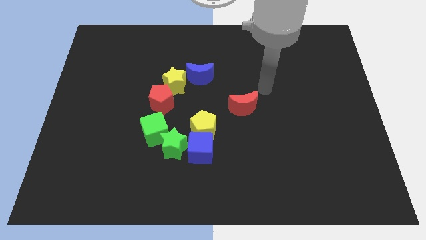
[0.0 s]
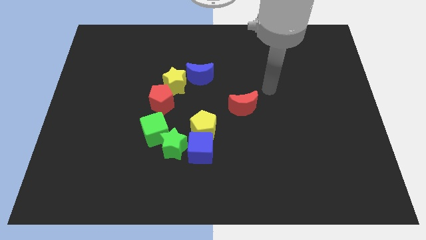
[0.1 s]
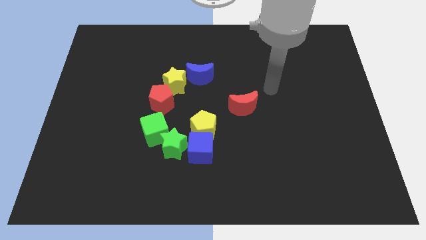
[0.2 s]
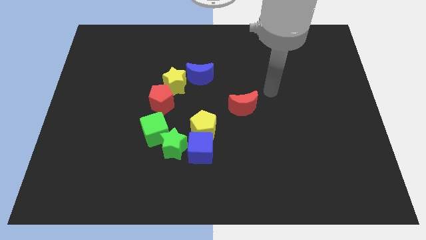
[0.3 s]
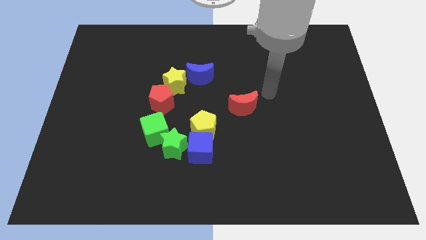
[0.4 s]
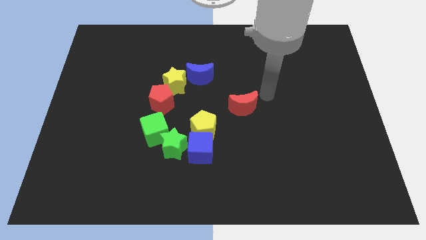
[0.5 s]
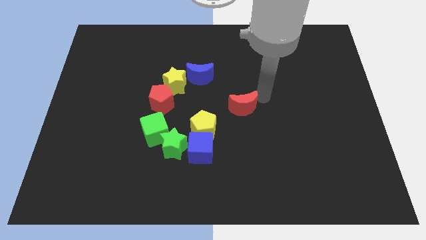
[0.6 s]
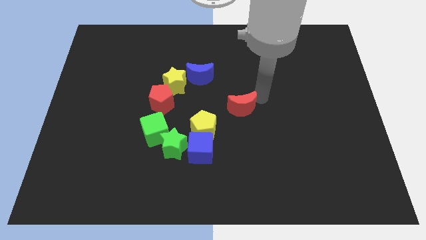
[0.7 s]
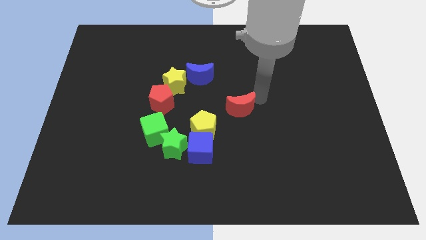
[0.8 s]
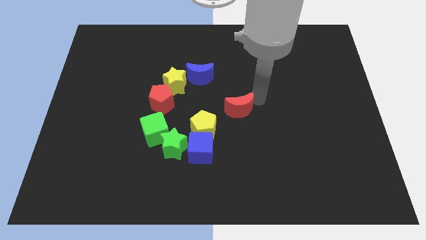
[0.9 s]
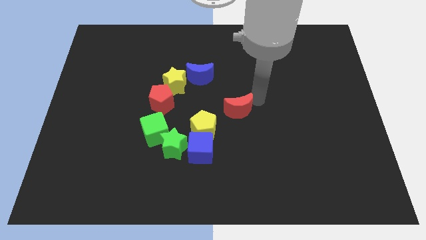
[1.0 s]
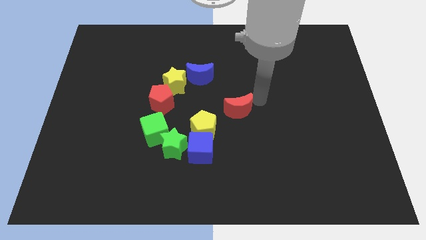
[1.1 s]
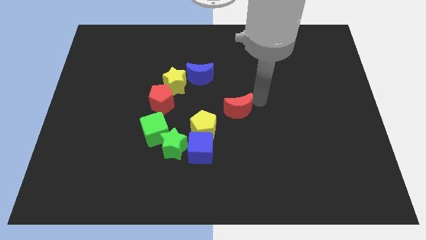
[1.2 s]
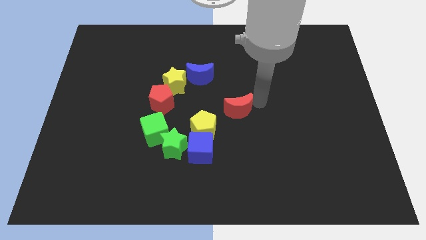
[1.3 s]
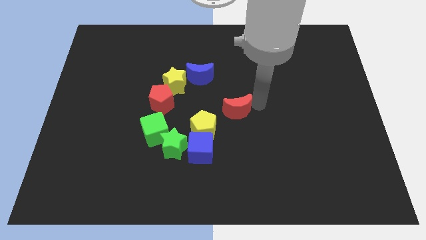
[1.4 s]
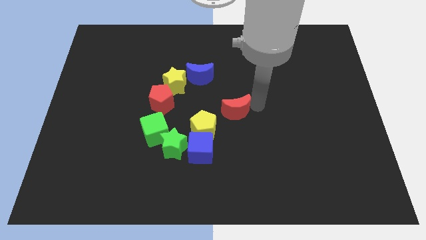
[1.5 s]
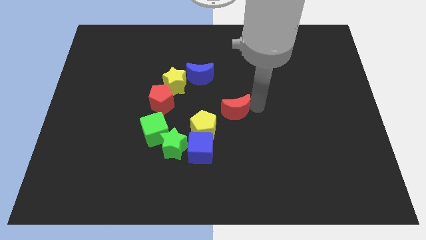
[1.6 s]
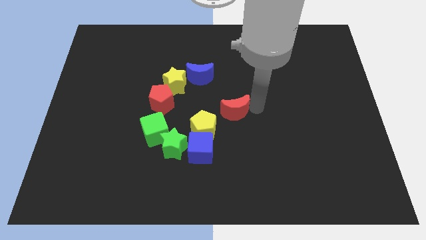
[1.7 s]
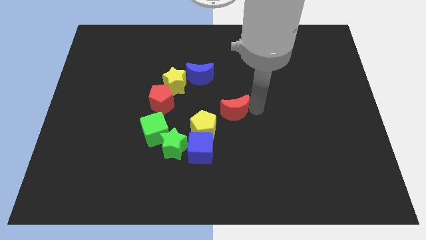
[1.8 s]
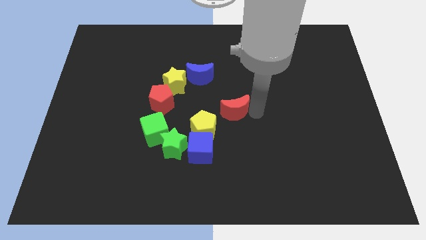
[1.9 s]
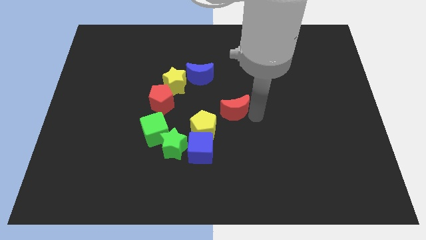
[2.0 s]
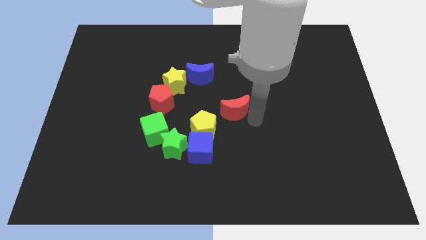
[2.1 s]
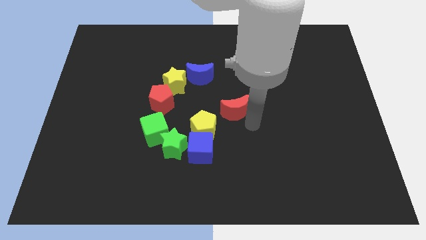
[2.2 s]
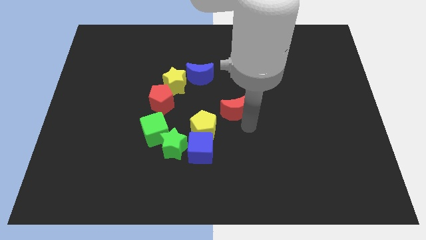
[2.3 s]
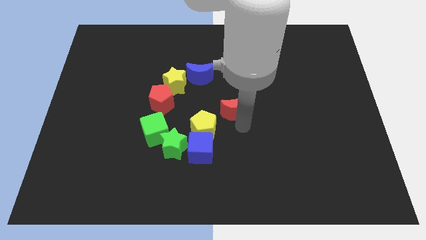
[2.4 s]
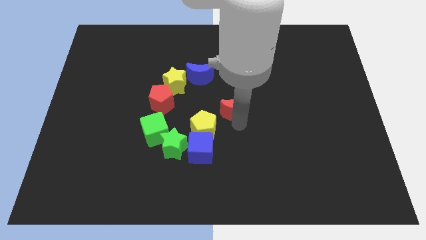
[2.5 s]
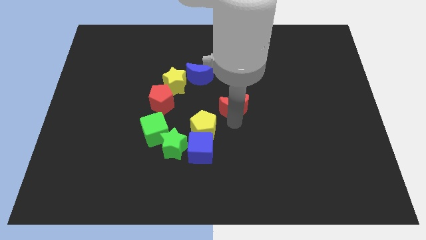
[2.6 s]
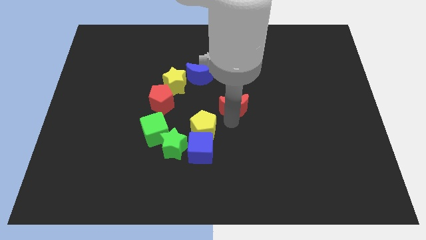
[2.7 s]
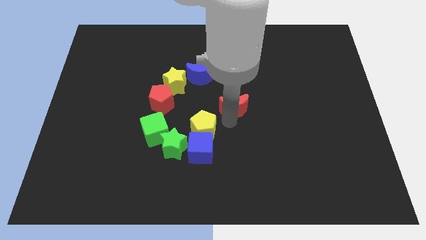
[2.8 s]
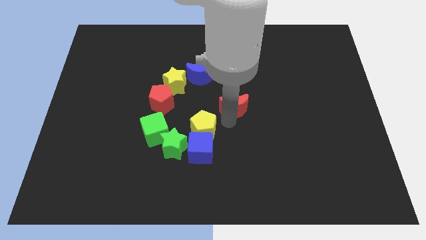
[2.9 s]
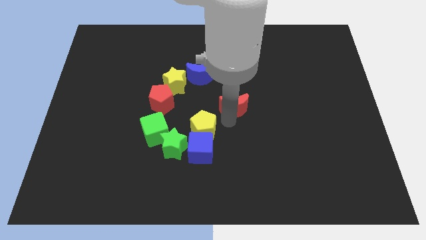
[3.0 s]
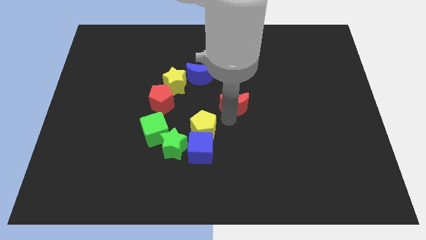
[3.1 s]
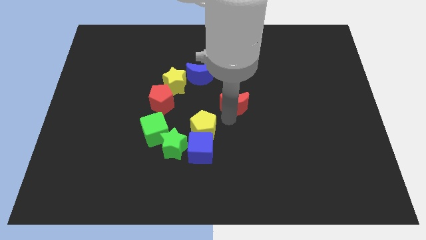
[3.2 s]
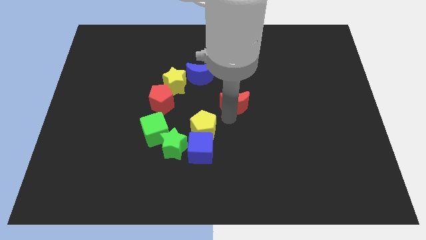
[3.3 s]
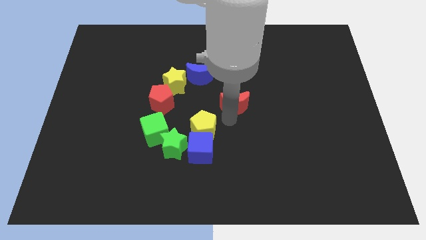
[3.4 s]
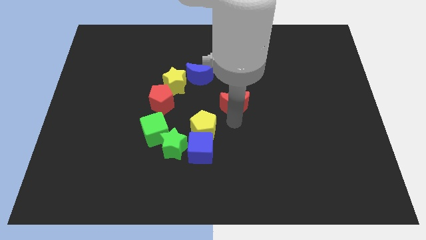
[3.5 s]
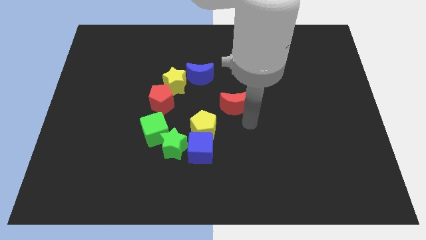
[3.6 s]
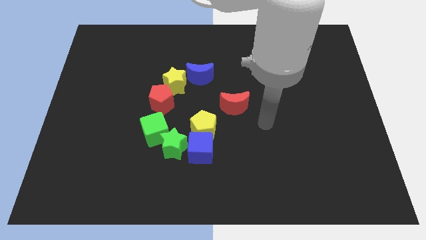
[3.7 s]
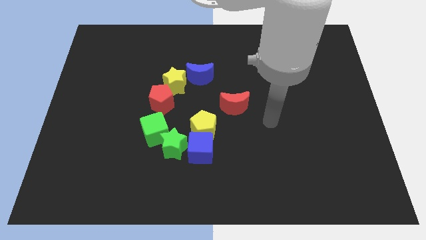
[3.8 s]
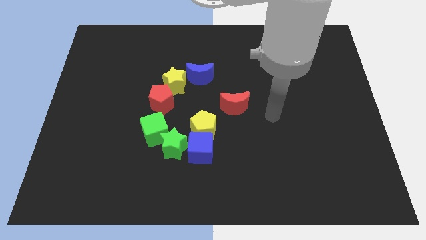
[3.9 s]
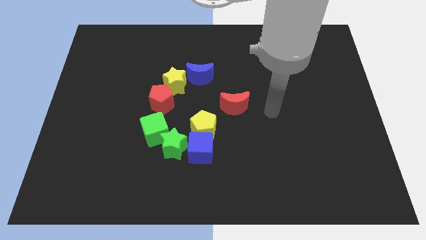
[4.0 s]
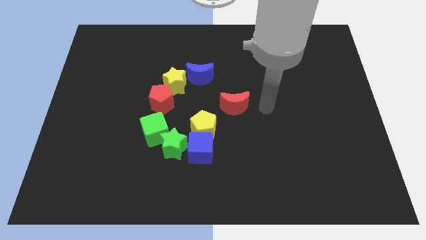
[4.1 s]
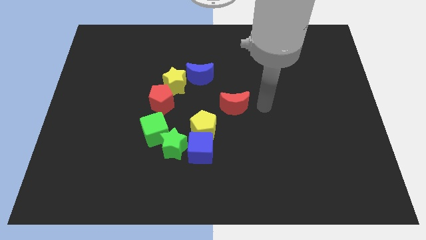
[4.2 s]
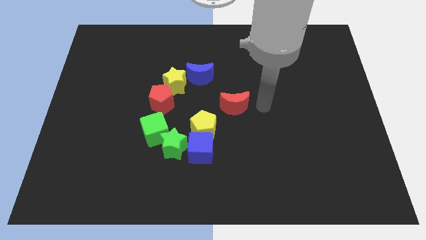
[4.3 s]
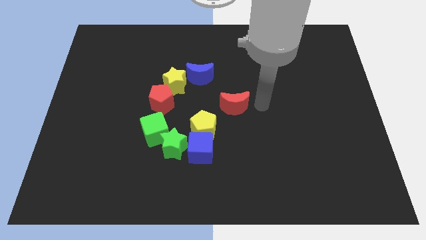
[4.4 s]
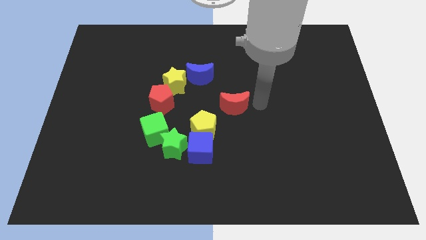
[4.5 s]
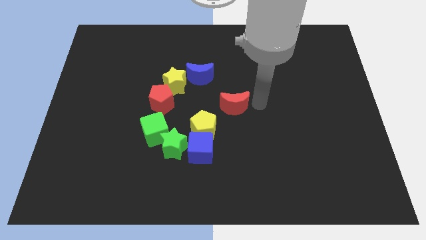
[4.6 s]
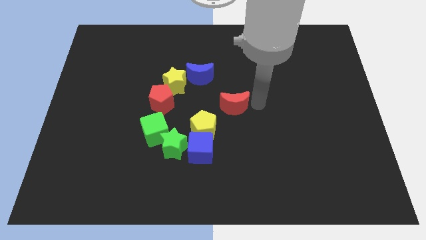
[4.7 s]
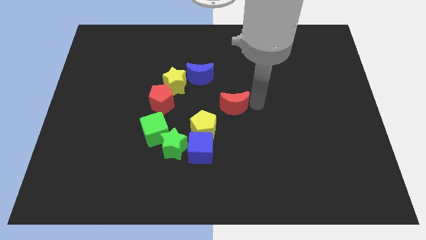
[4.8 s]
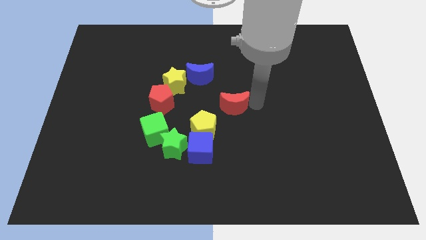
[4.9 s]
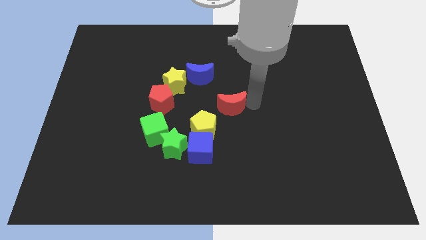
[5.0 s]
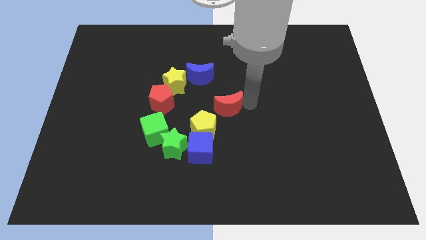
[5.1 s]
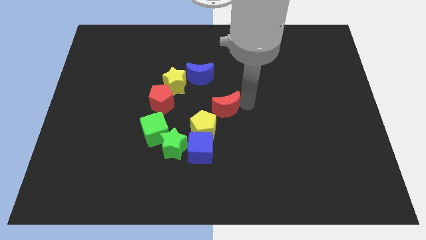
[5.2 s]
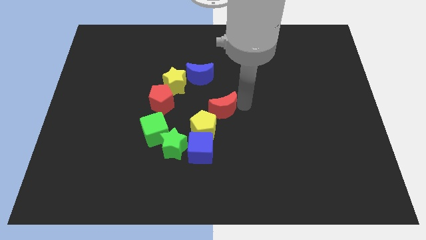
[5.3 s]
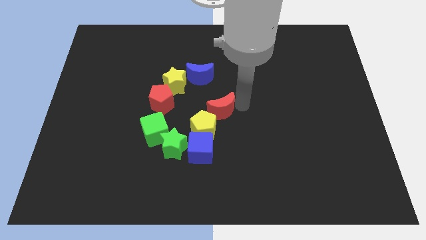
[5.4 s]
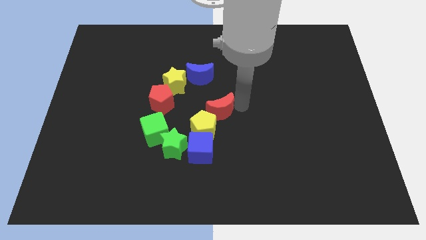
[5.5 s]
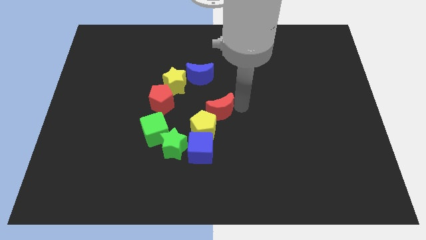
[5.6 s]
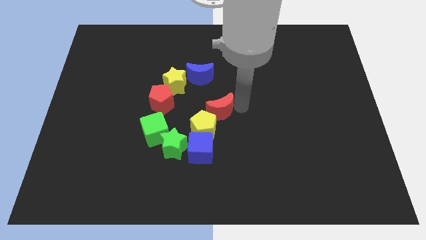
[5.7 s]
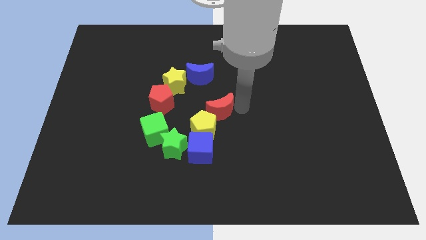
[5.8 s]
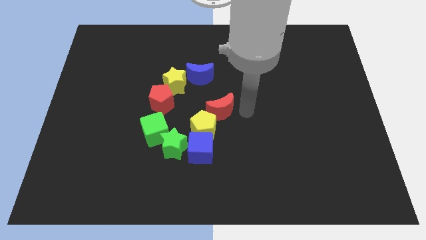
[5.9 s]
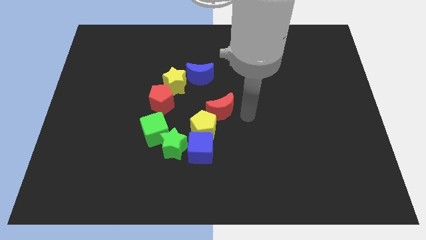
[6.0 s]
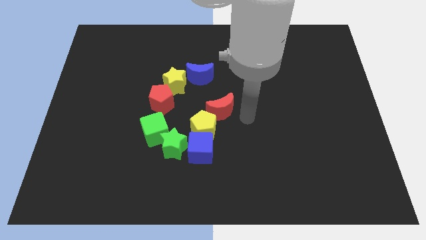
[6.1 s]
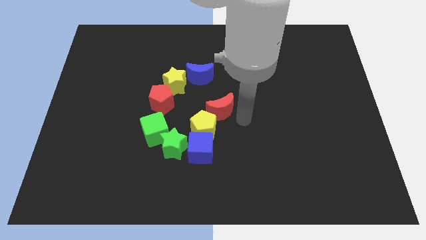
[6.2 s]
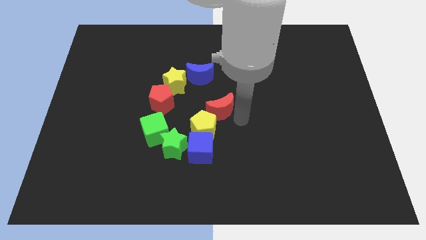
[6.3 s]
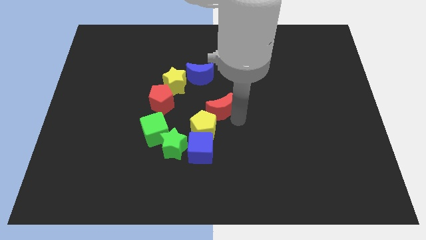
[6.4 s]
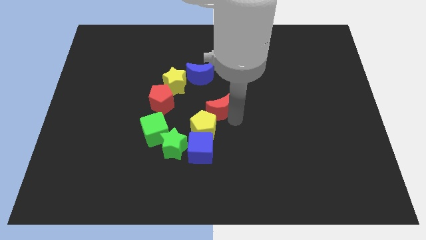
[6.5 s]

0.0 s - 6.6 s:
move the red crescent to the top right side of the yellow pentagon

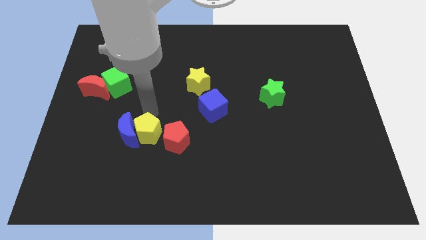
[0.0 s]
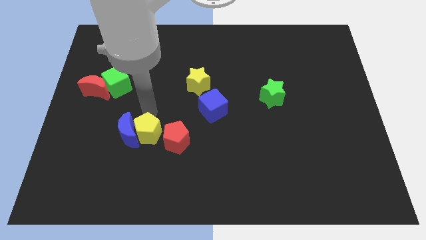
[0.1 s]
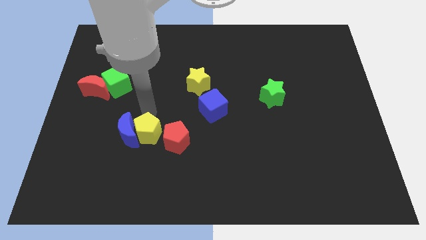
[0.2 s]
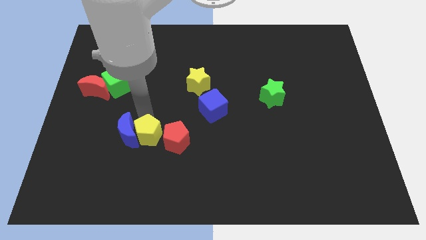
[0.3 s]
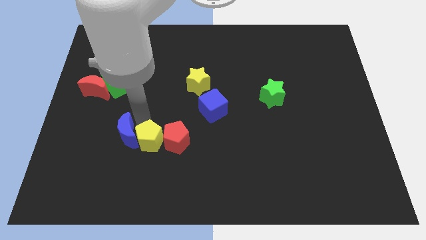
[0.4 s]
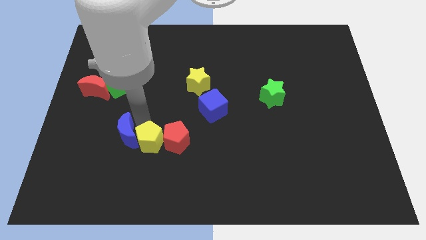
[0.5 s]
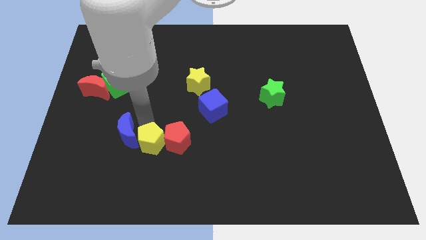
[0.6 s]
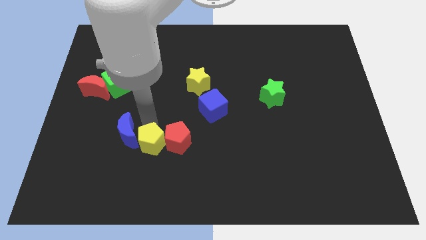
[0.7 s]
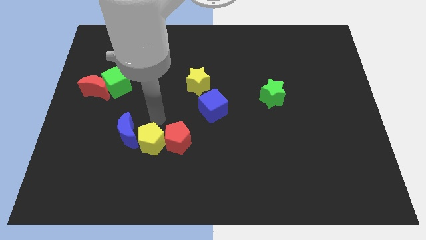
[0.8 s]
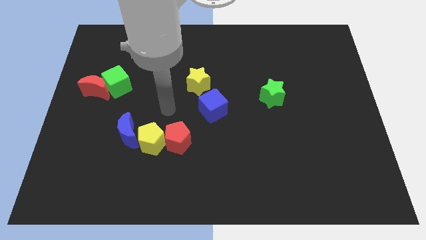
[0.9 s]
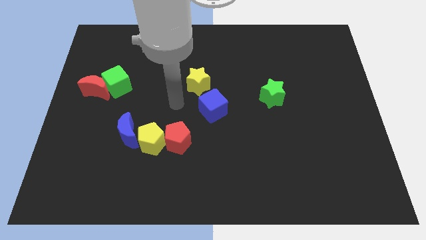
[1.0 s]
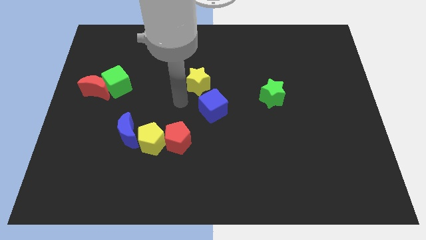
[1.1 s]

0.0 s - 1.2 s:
slightly push the yellow pentagon towards the left of the red pentagon

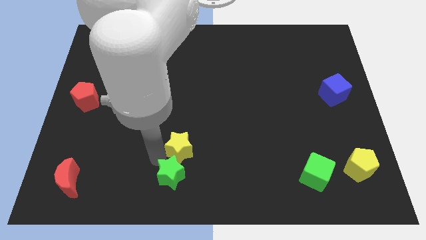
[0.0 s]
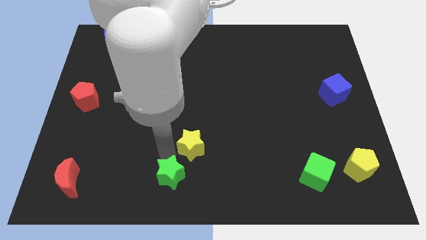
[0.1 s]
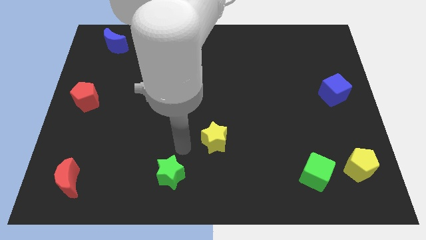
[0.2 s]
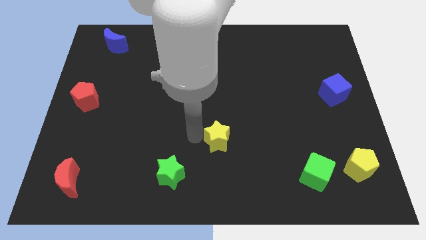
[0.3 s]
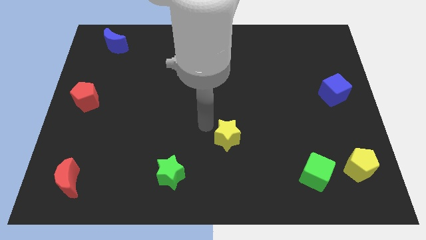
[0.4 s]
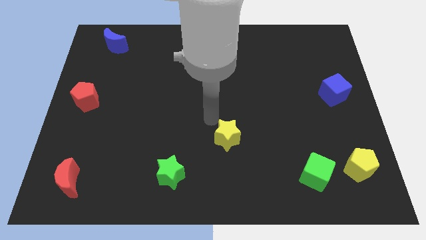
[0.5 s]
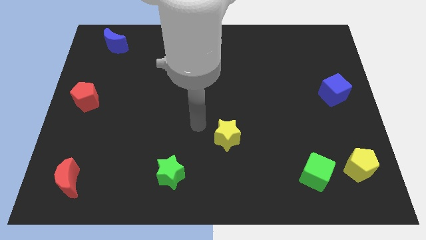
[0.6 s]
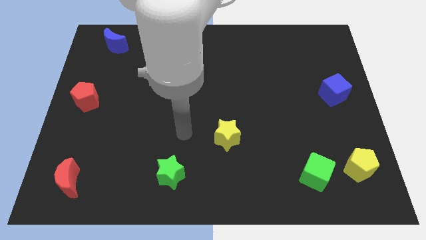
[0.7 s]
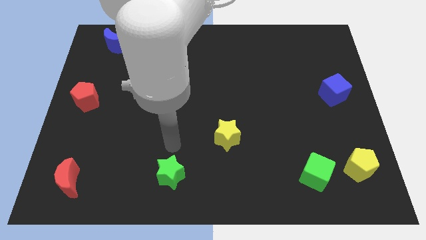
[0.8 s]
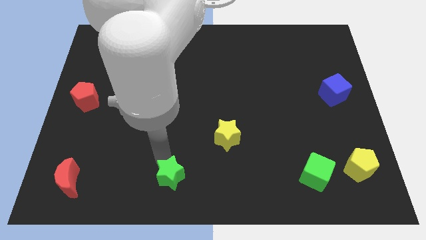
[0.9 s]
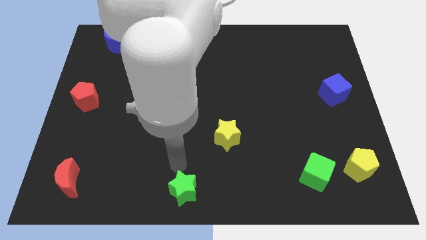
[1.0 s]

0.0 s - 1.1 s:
separate the stars

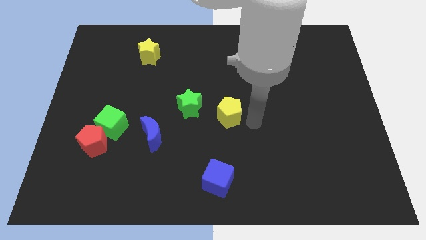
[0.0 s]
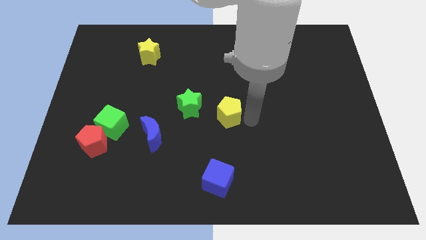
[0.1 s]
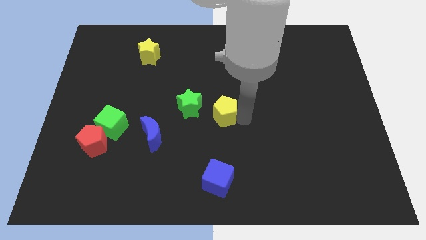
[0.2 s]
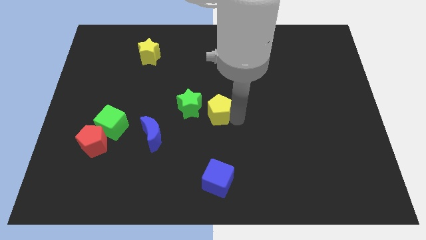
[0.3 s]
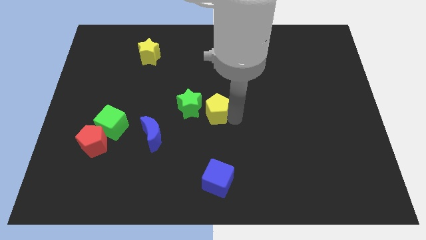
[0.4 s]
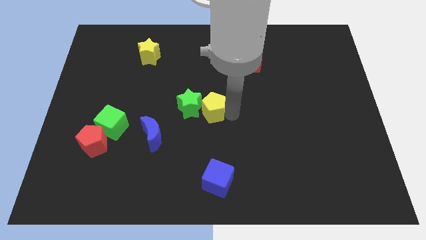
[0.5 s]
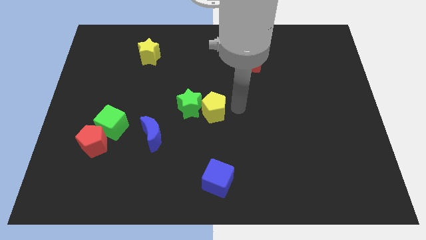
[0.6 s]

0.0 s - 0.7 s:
push the yellow pentagon to the right side of green star
